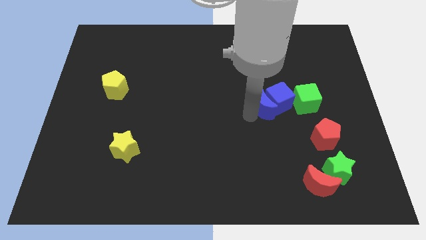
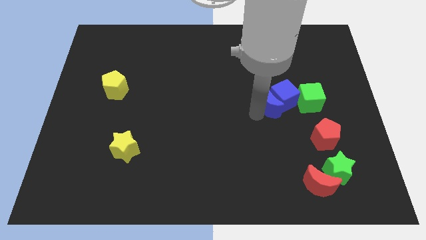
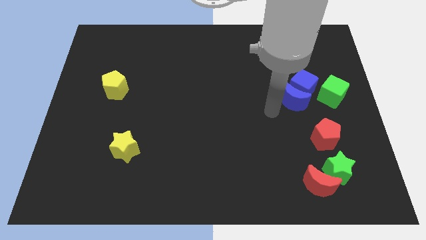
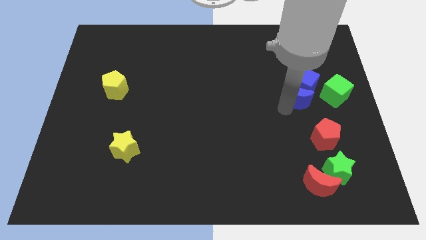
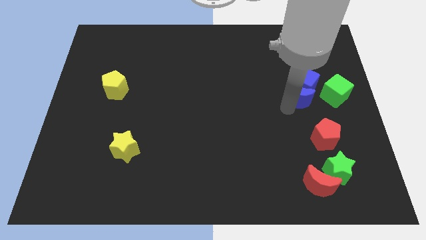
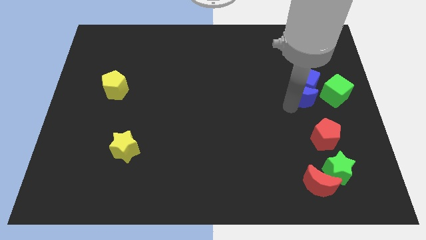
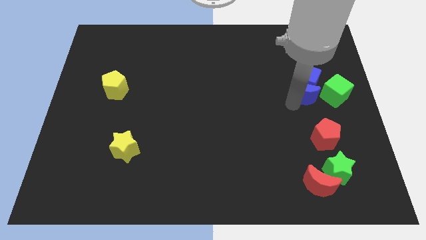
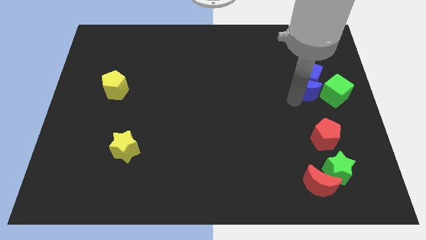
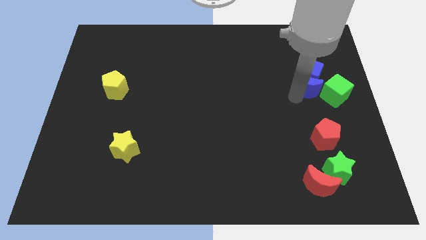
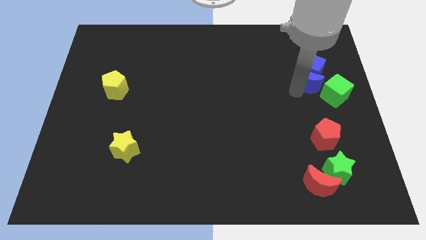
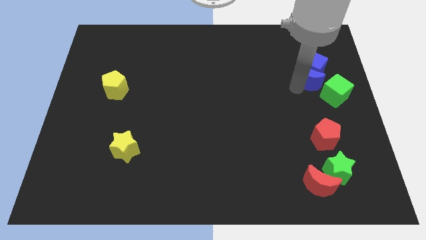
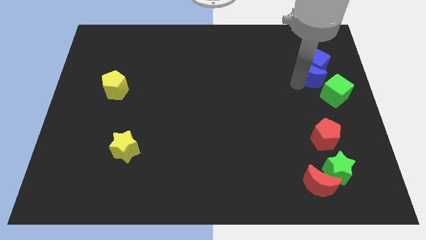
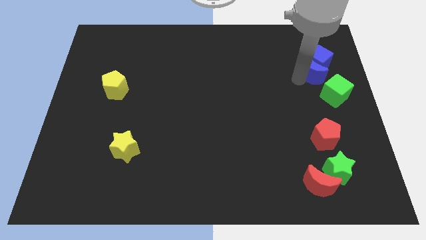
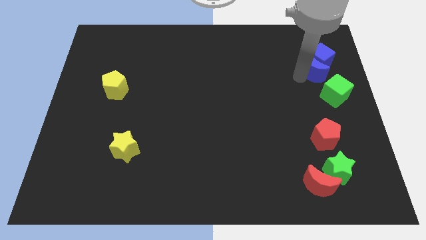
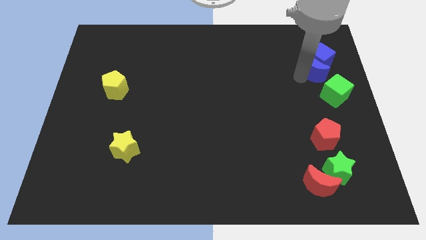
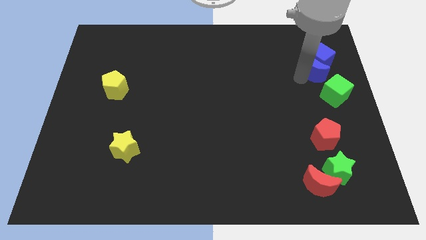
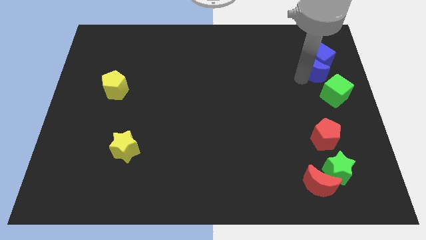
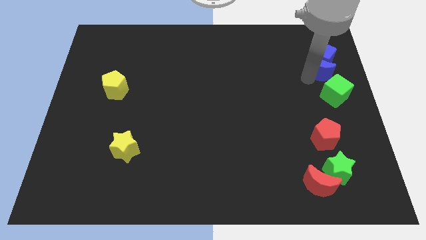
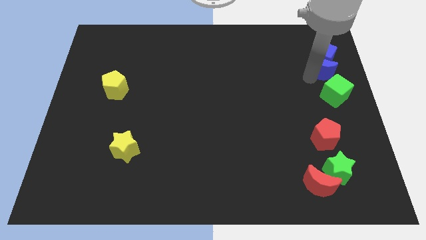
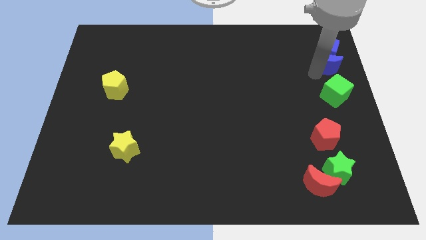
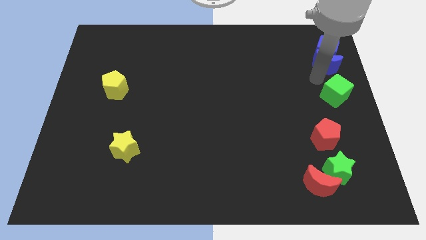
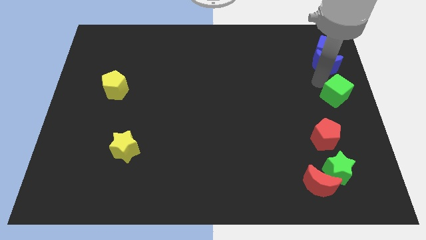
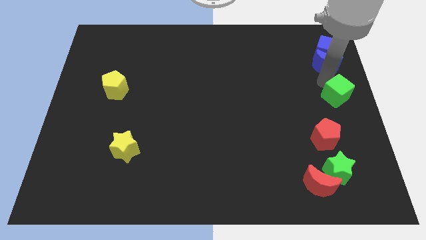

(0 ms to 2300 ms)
move blue blocks vertically above the green cube

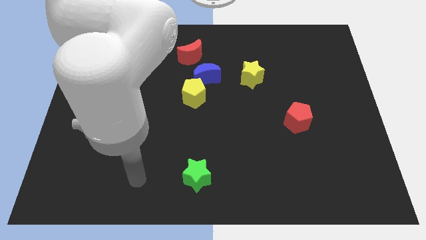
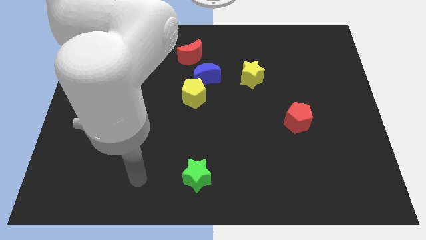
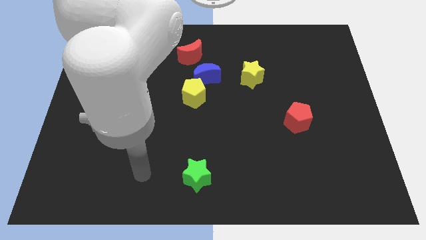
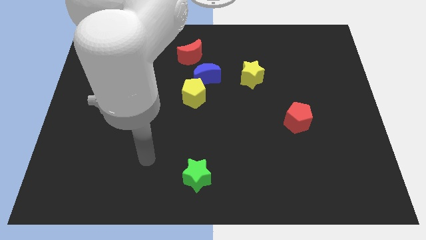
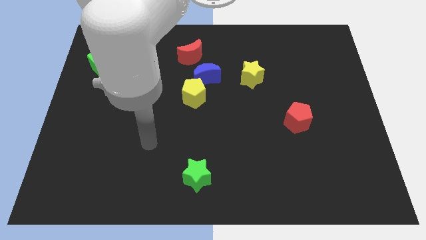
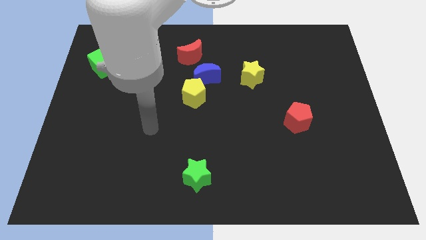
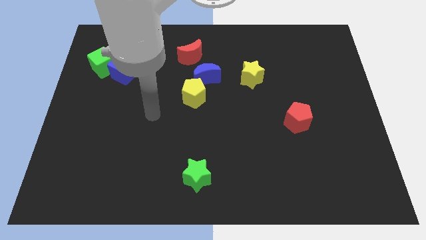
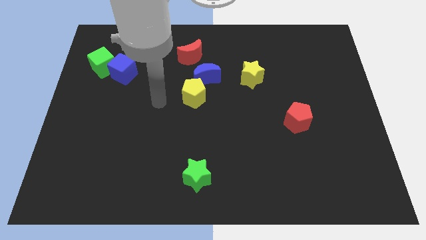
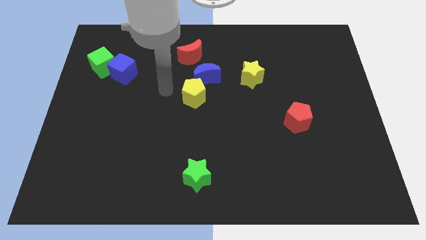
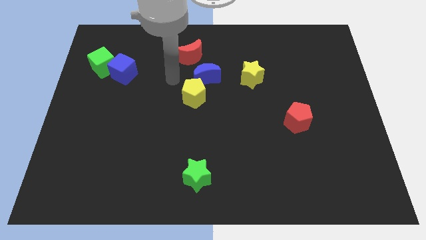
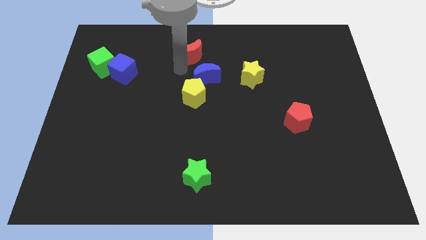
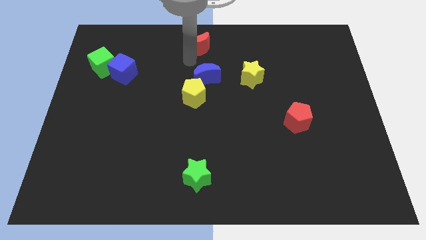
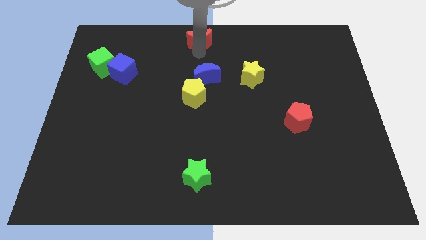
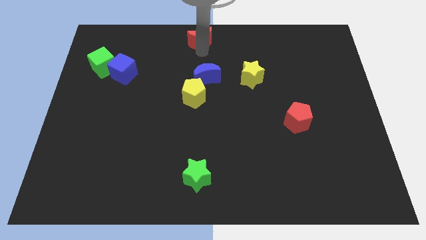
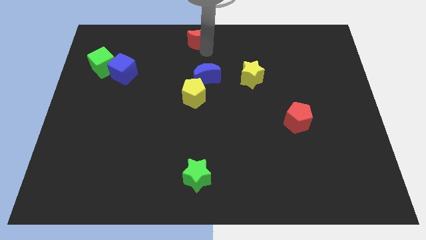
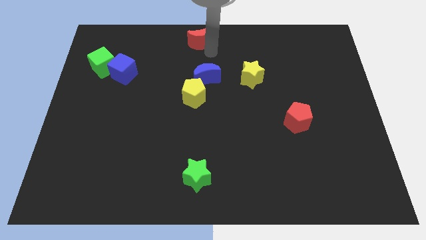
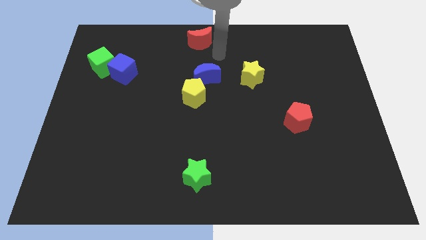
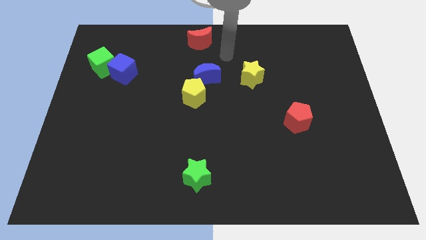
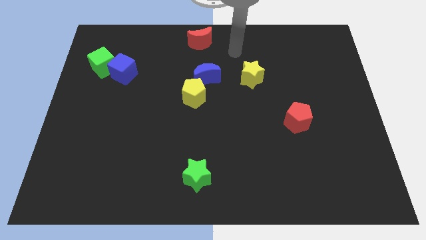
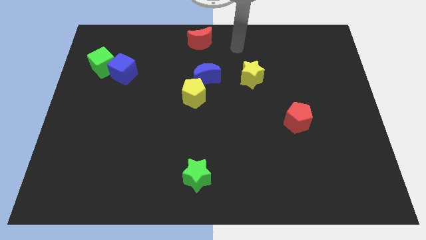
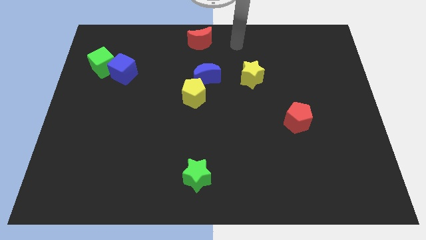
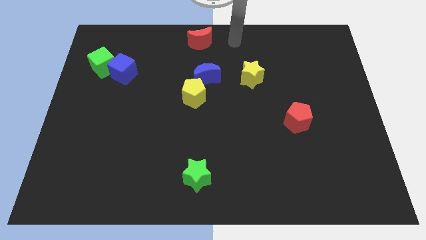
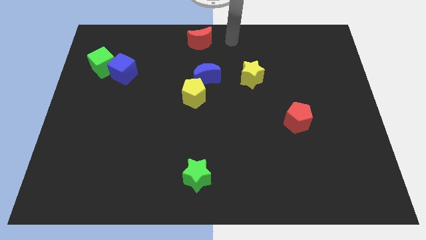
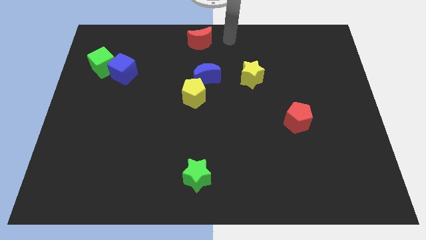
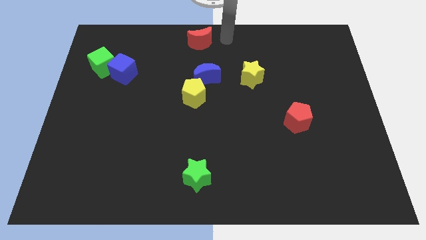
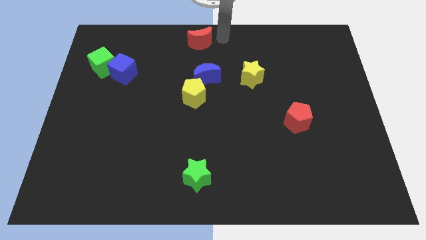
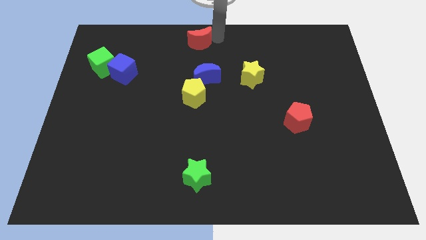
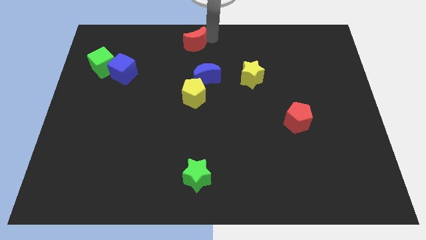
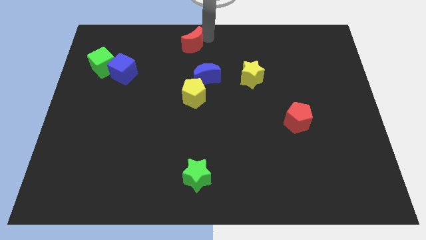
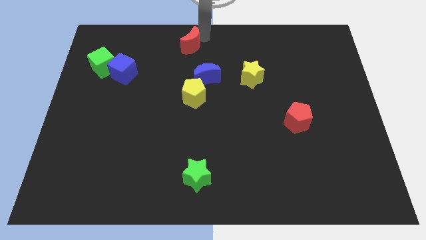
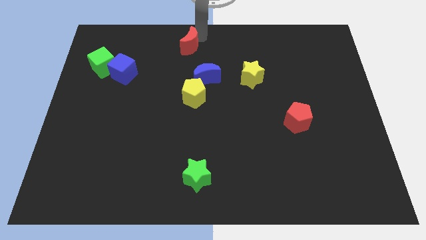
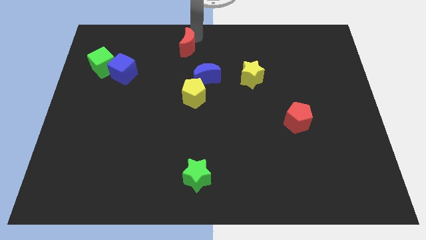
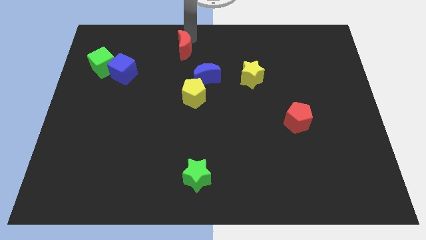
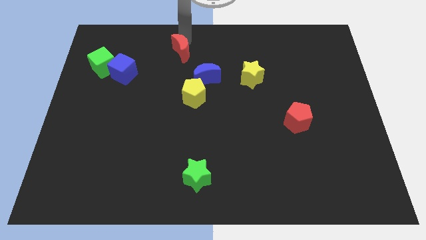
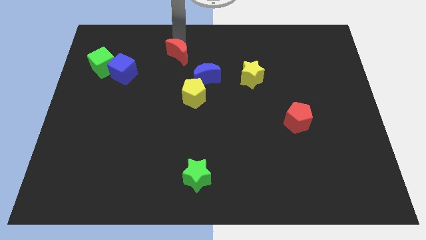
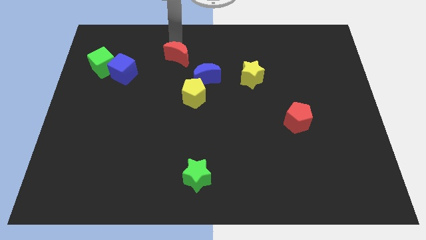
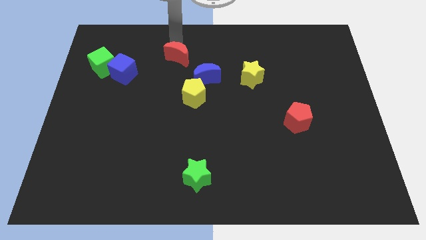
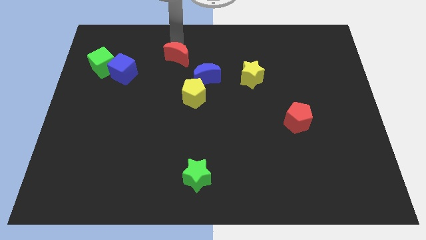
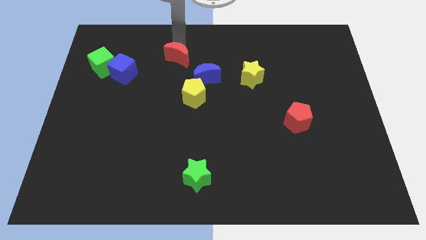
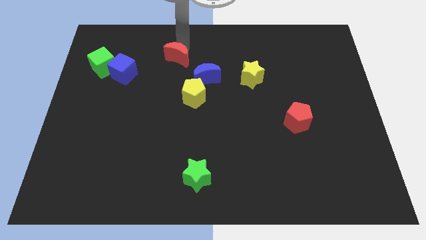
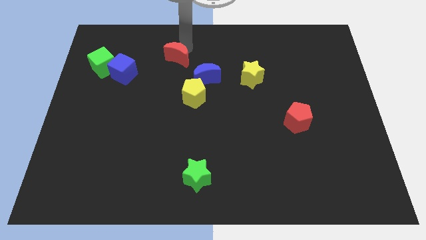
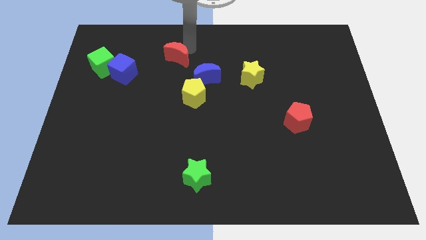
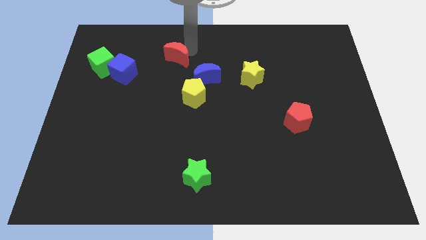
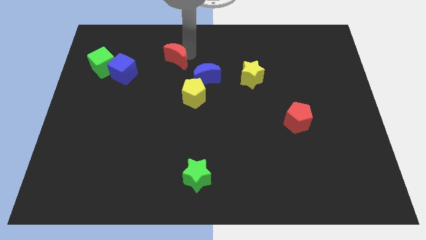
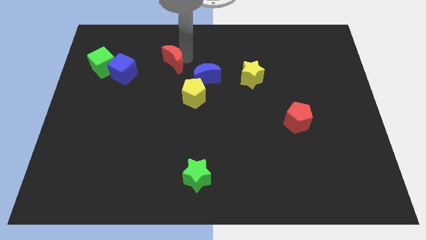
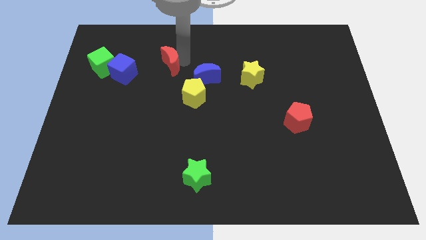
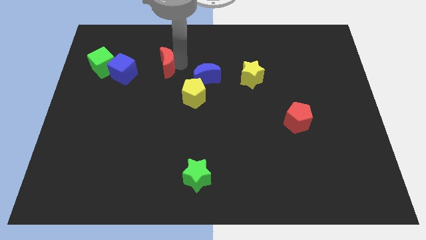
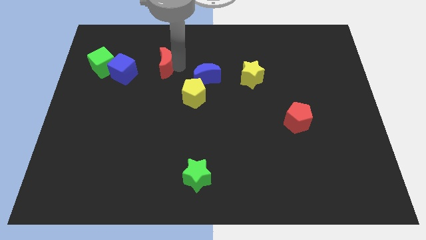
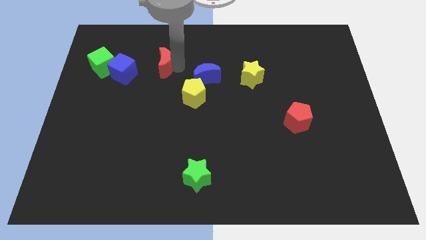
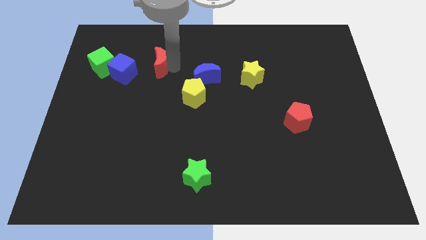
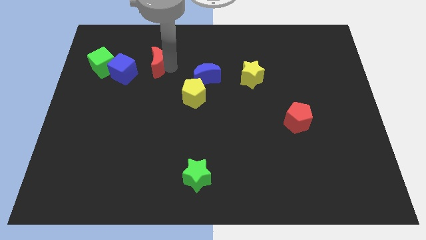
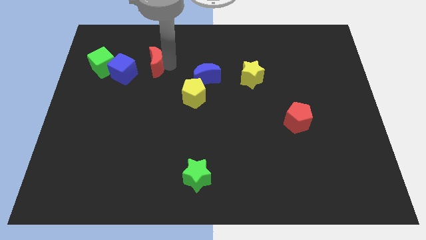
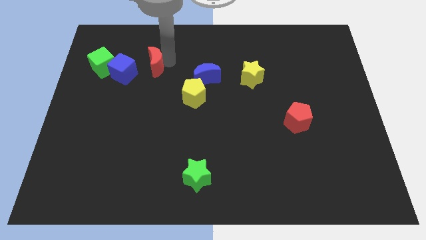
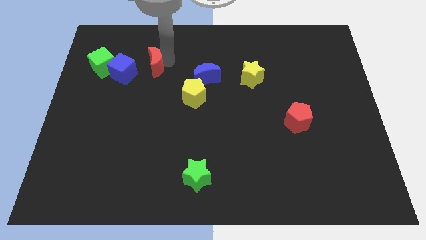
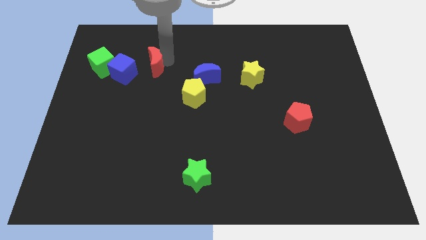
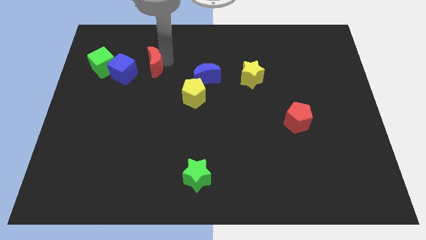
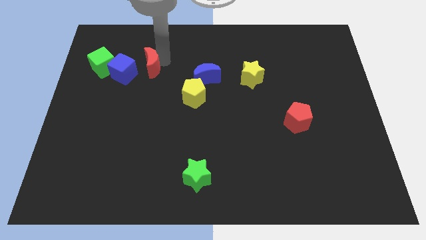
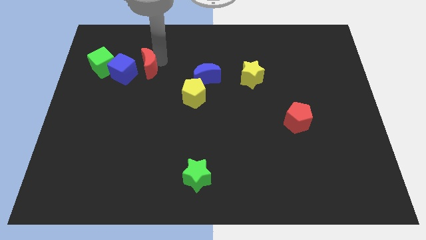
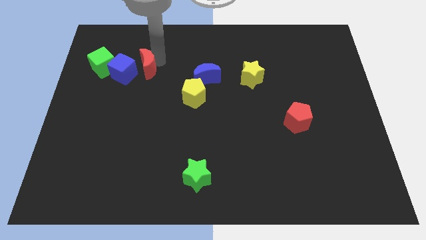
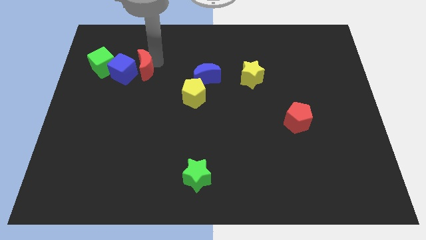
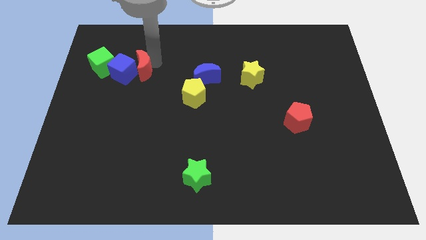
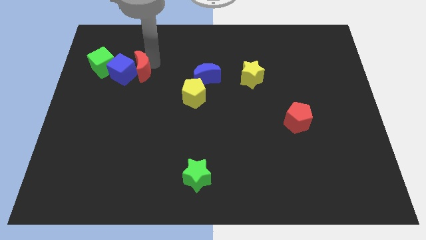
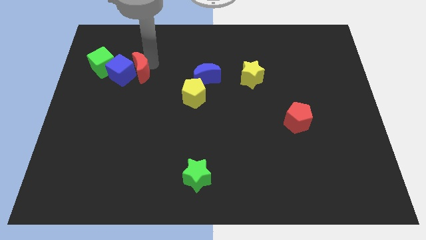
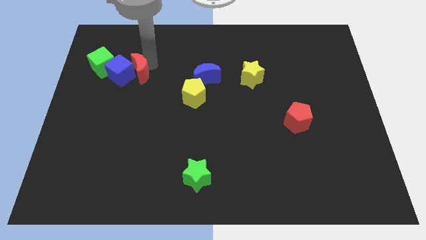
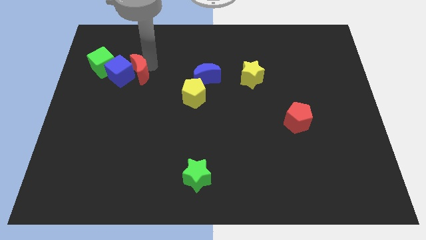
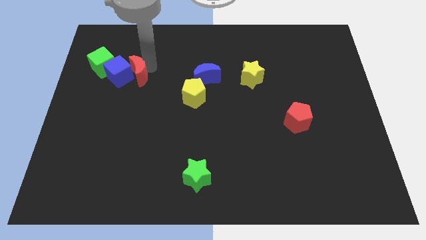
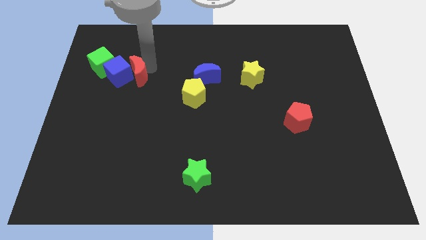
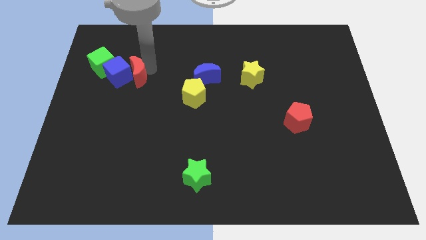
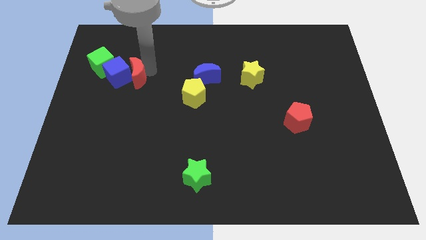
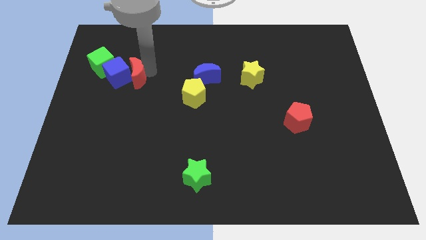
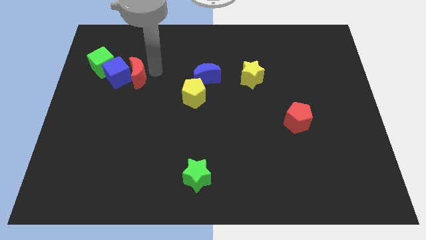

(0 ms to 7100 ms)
move the red crescent close to the blue cube
